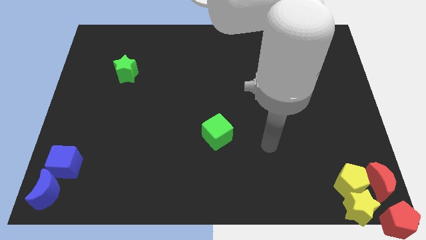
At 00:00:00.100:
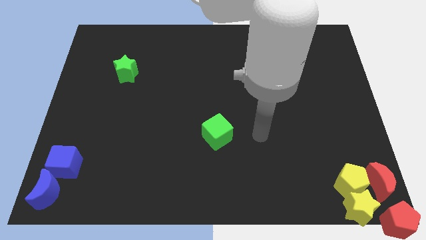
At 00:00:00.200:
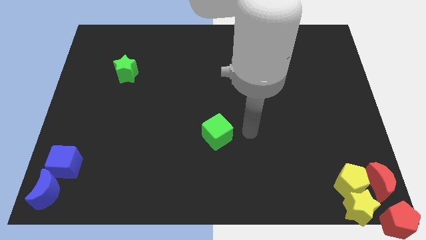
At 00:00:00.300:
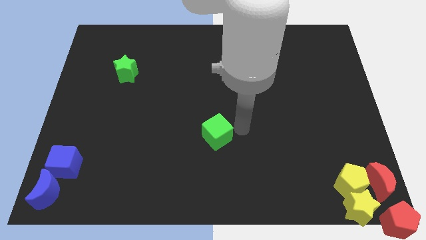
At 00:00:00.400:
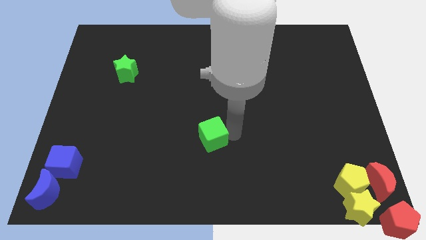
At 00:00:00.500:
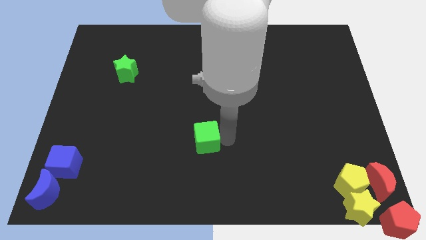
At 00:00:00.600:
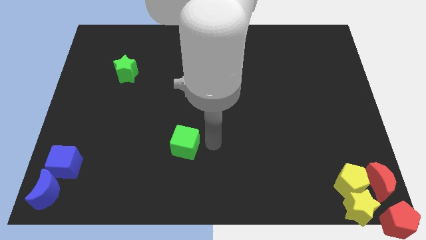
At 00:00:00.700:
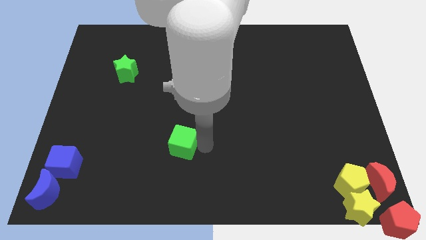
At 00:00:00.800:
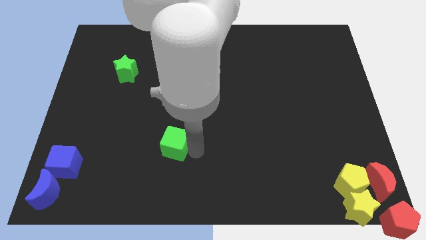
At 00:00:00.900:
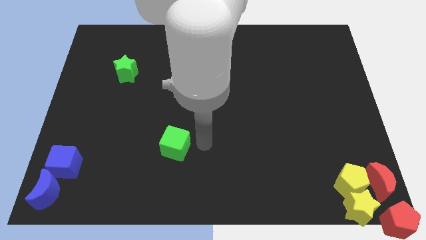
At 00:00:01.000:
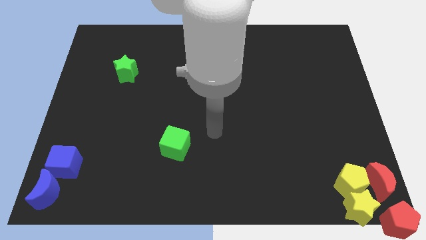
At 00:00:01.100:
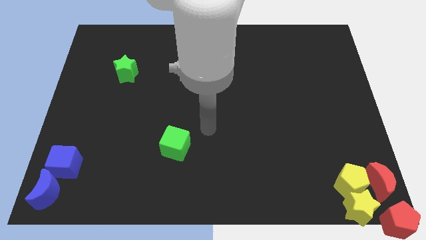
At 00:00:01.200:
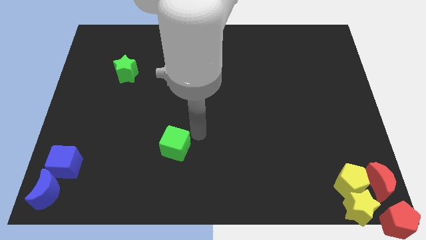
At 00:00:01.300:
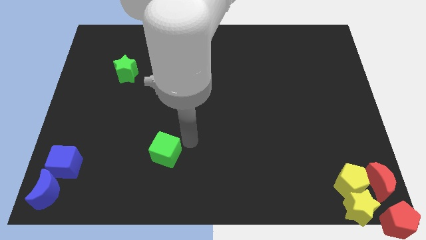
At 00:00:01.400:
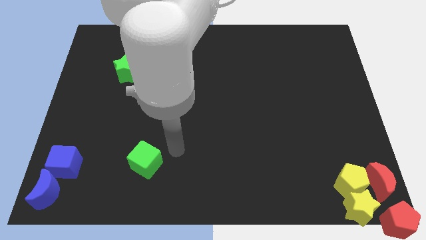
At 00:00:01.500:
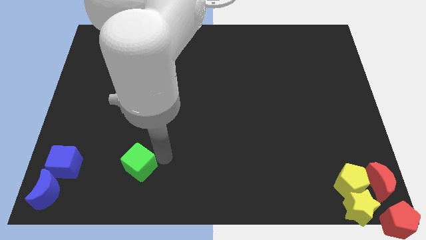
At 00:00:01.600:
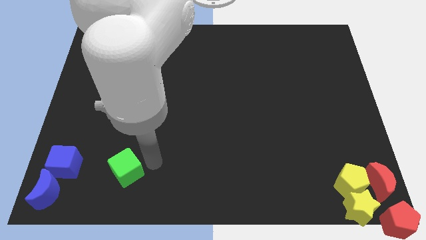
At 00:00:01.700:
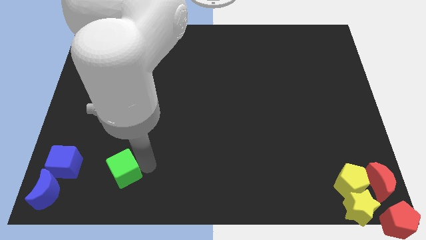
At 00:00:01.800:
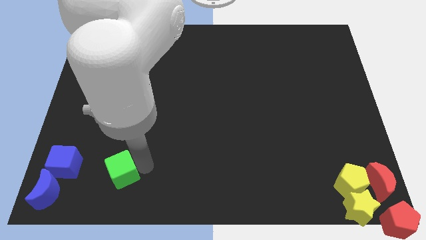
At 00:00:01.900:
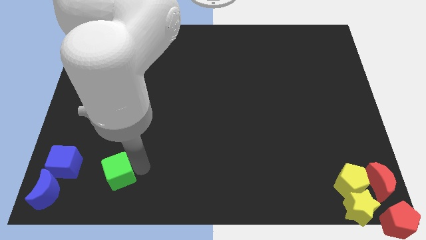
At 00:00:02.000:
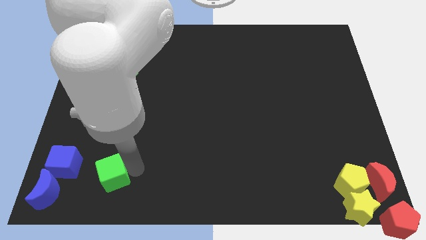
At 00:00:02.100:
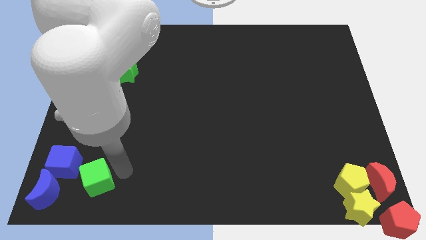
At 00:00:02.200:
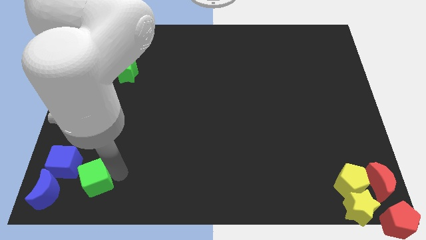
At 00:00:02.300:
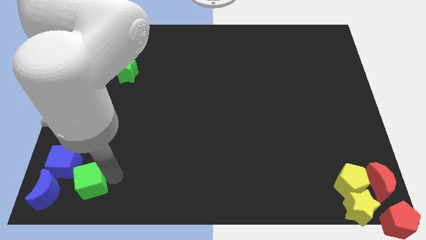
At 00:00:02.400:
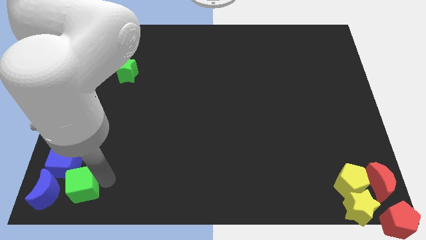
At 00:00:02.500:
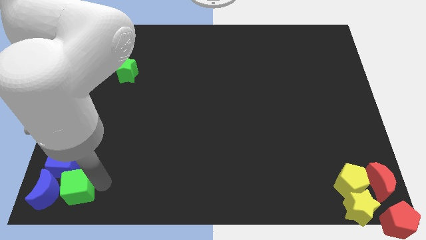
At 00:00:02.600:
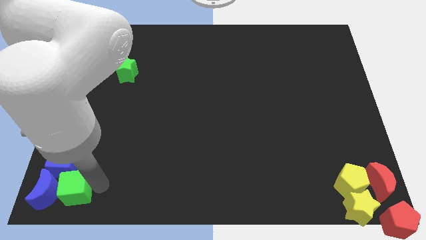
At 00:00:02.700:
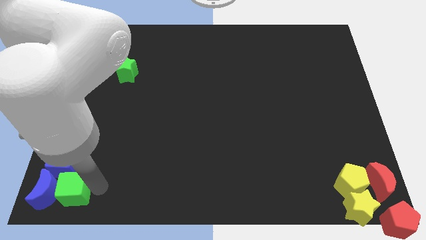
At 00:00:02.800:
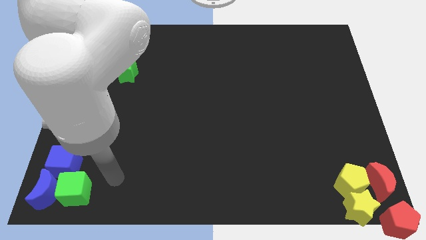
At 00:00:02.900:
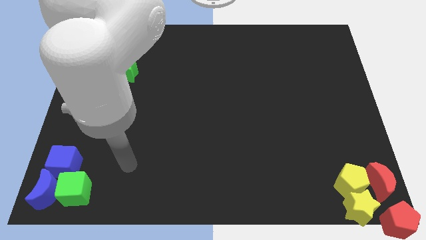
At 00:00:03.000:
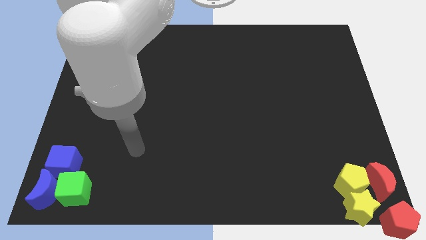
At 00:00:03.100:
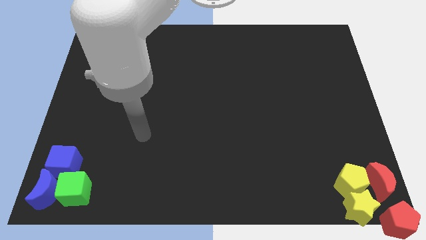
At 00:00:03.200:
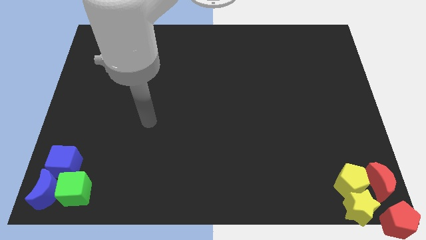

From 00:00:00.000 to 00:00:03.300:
move the green cube right beside the blue blocks

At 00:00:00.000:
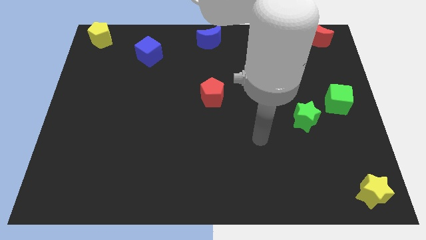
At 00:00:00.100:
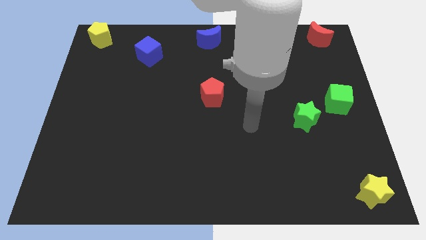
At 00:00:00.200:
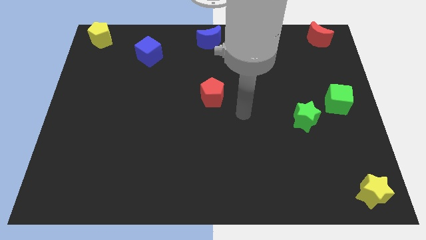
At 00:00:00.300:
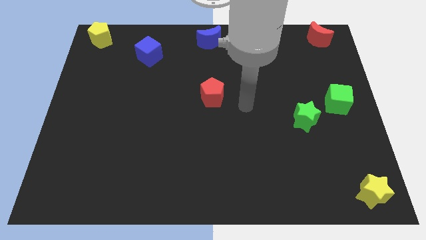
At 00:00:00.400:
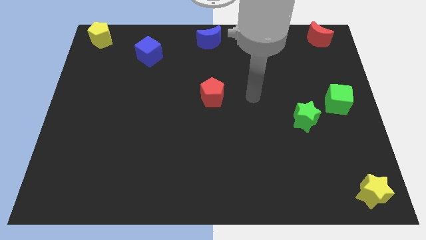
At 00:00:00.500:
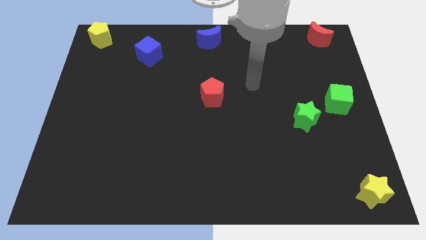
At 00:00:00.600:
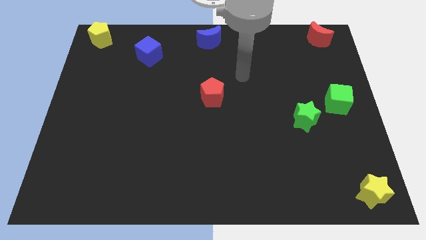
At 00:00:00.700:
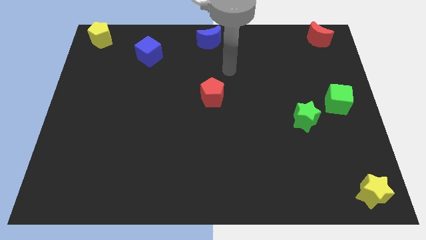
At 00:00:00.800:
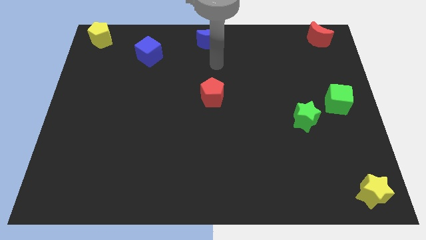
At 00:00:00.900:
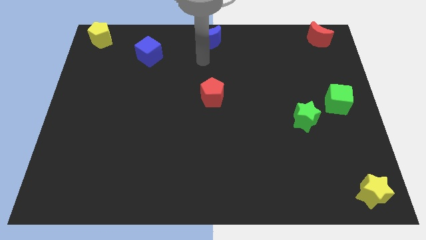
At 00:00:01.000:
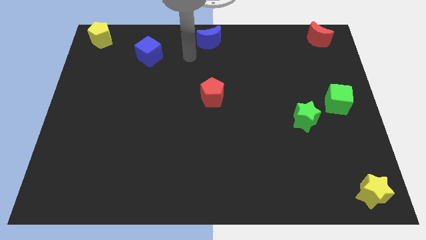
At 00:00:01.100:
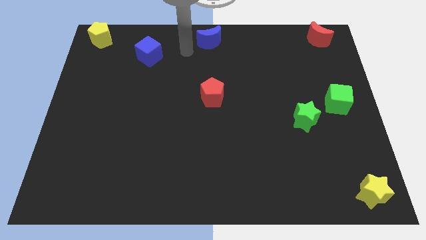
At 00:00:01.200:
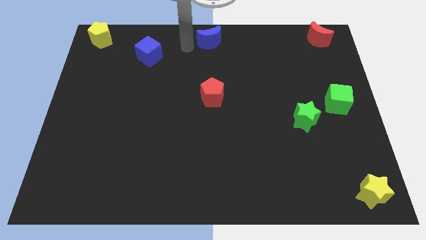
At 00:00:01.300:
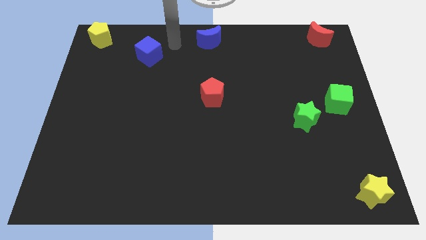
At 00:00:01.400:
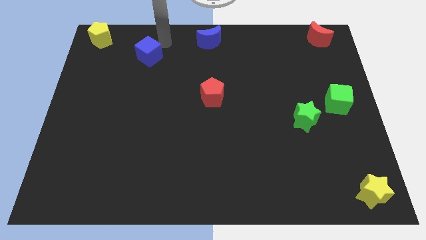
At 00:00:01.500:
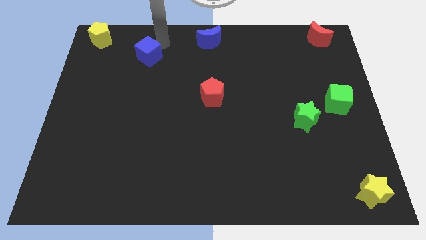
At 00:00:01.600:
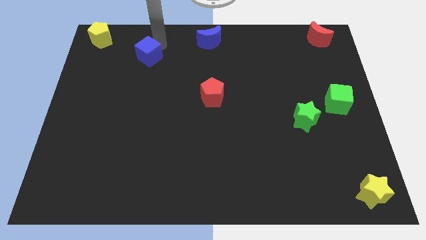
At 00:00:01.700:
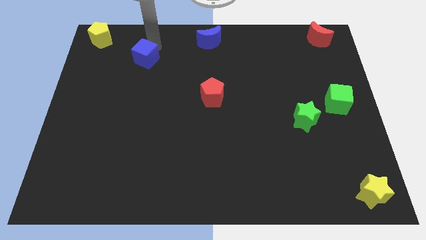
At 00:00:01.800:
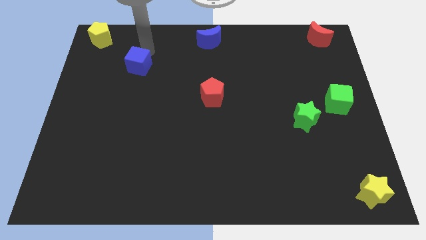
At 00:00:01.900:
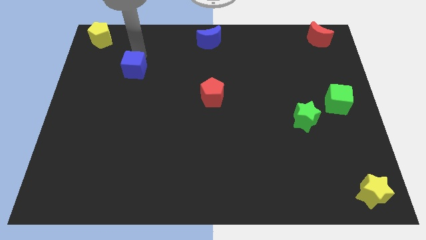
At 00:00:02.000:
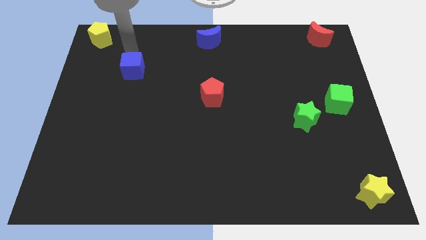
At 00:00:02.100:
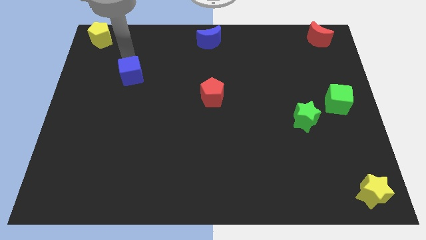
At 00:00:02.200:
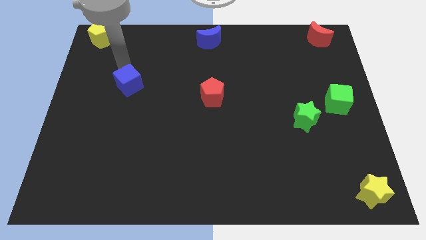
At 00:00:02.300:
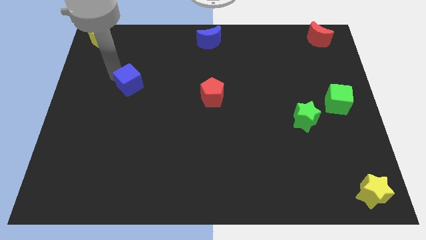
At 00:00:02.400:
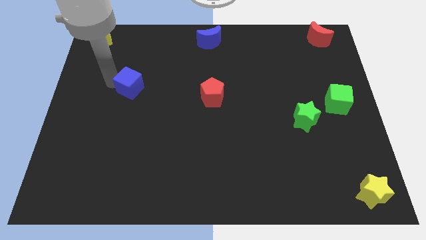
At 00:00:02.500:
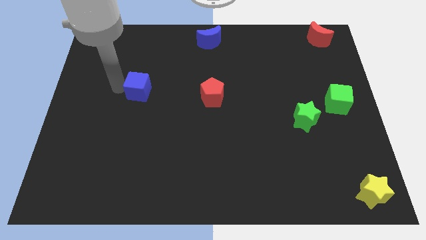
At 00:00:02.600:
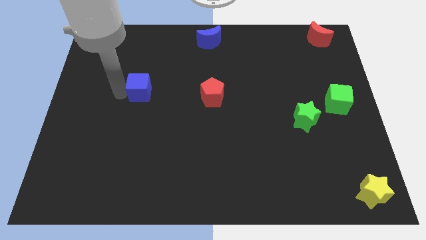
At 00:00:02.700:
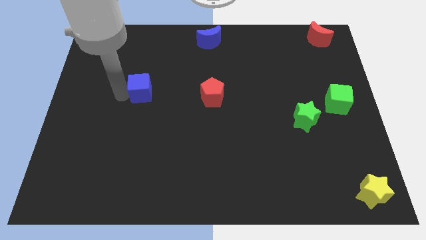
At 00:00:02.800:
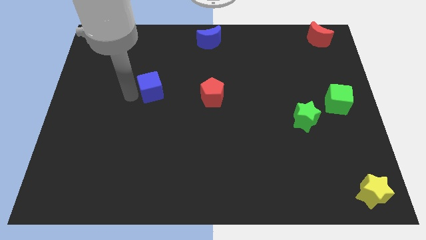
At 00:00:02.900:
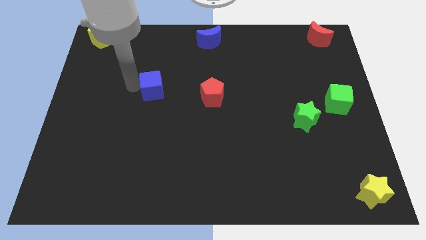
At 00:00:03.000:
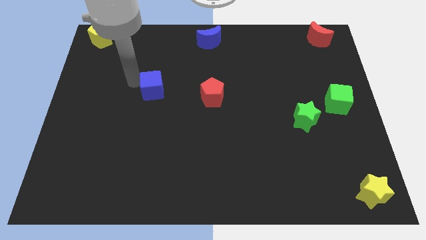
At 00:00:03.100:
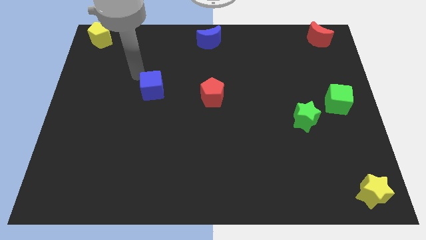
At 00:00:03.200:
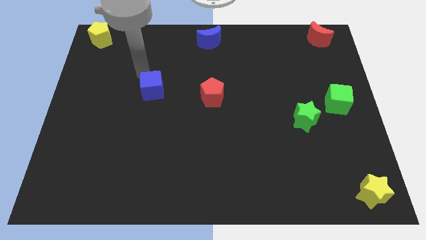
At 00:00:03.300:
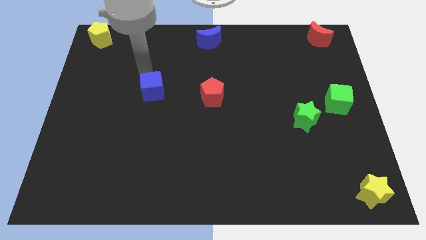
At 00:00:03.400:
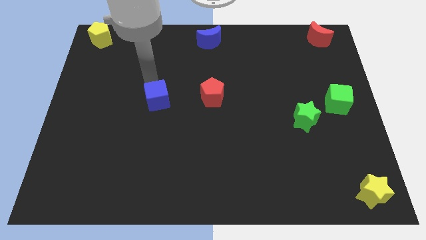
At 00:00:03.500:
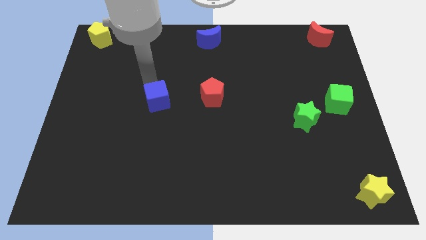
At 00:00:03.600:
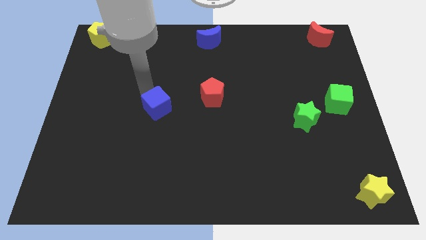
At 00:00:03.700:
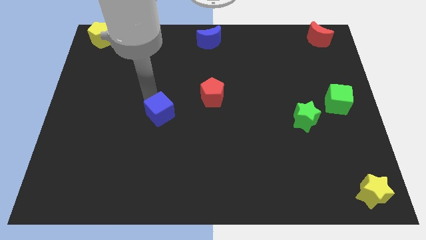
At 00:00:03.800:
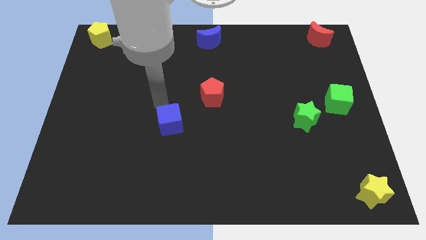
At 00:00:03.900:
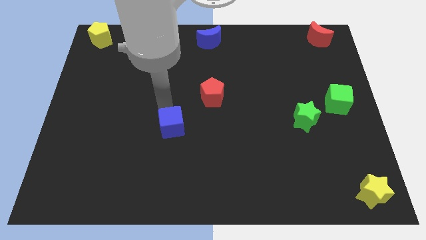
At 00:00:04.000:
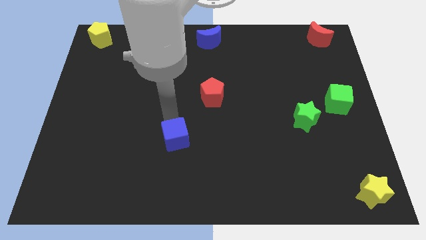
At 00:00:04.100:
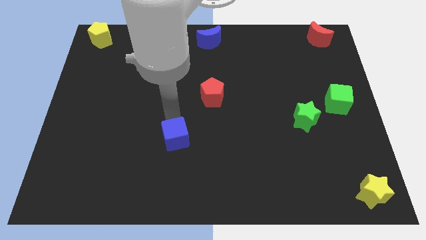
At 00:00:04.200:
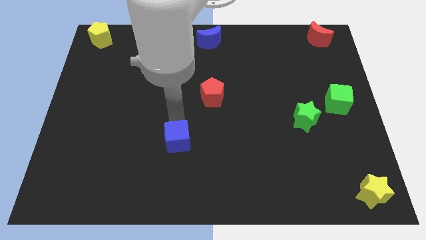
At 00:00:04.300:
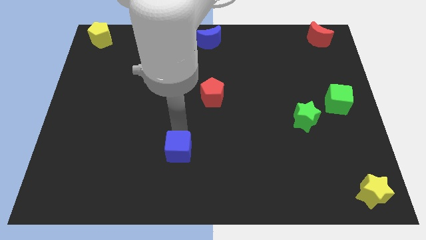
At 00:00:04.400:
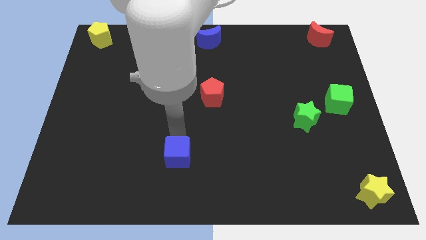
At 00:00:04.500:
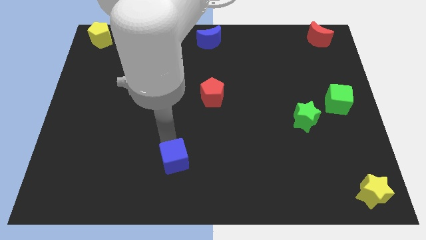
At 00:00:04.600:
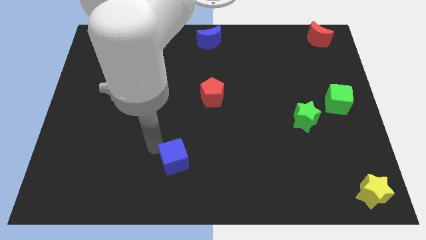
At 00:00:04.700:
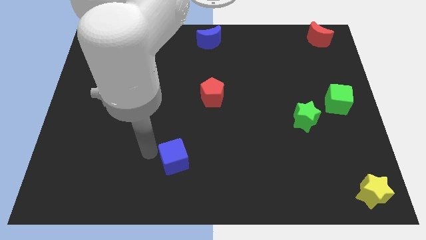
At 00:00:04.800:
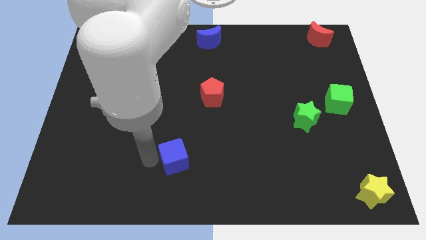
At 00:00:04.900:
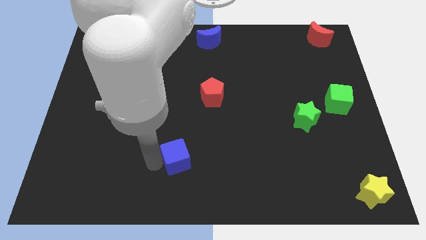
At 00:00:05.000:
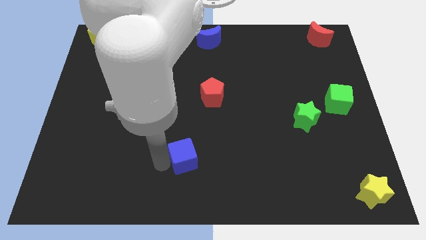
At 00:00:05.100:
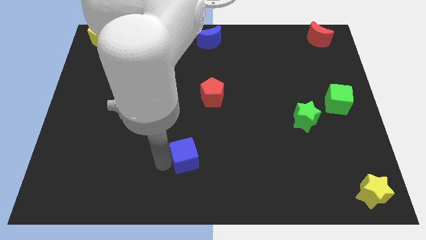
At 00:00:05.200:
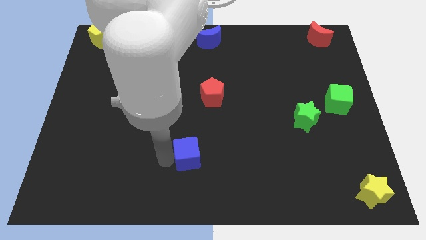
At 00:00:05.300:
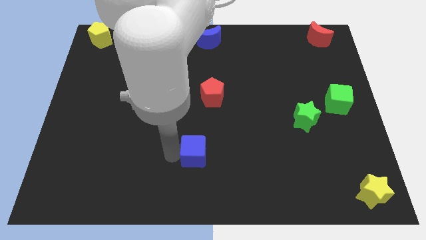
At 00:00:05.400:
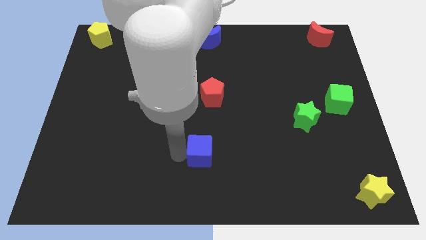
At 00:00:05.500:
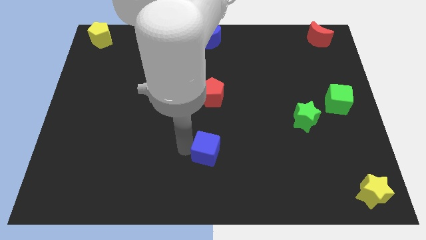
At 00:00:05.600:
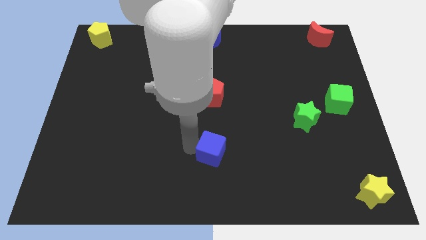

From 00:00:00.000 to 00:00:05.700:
place the blue cube below the red pentagon
